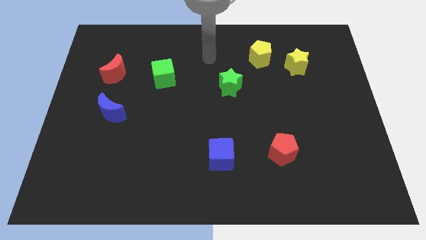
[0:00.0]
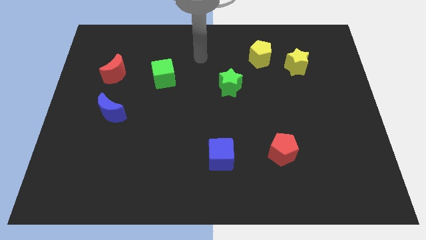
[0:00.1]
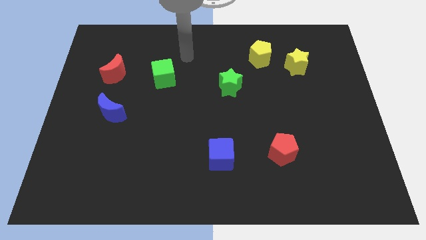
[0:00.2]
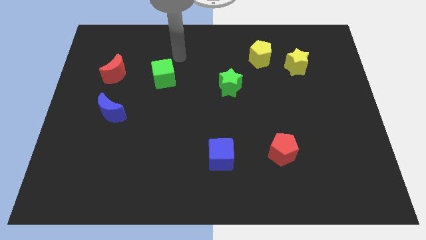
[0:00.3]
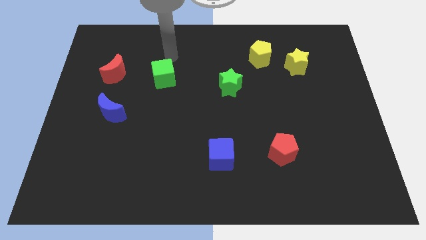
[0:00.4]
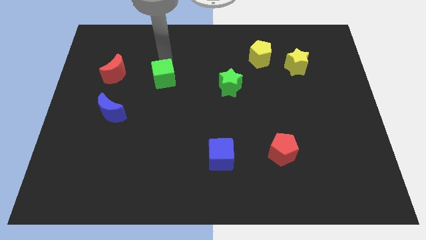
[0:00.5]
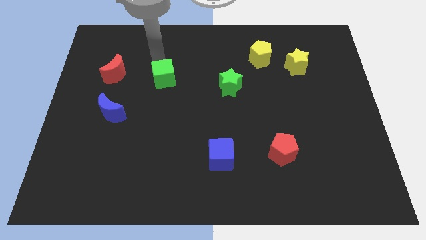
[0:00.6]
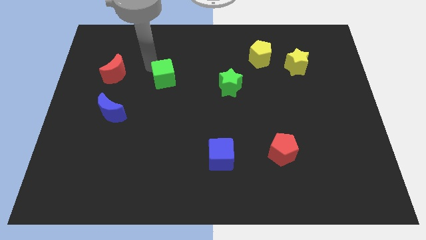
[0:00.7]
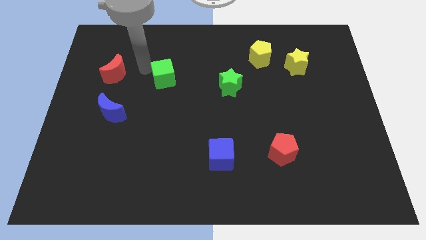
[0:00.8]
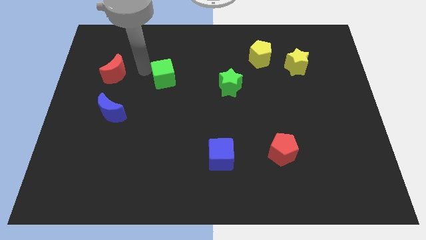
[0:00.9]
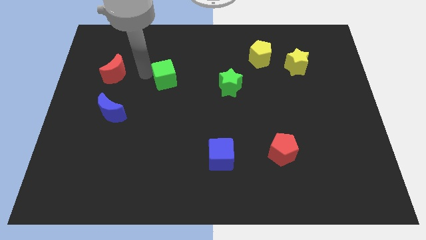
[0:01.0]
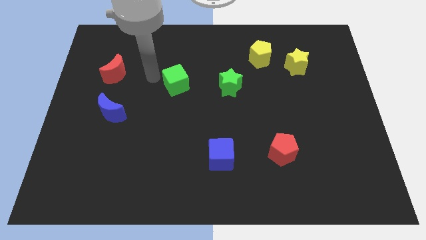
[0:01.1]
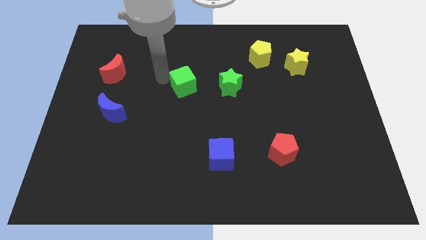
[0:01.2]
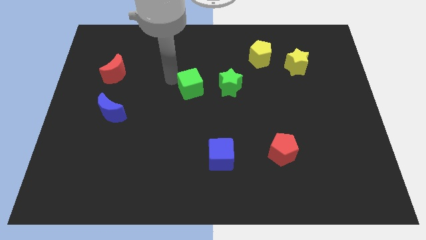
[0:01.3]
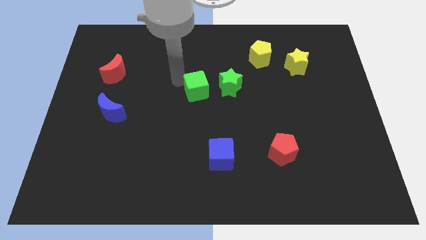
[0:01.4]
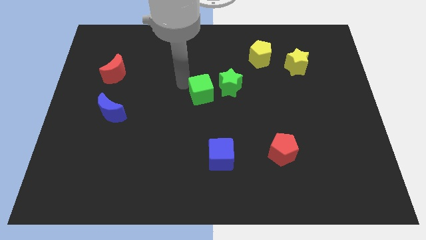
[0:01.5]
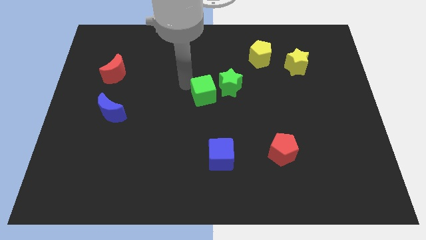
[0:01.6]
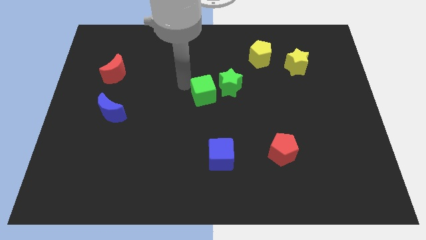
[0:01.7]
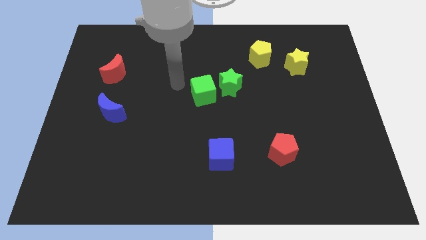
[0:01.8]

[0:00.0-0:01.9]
place the green cube to the left of green star

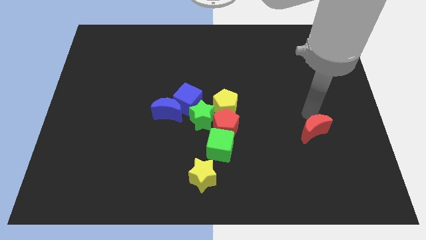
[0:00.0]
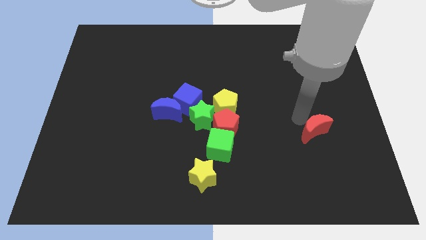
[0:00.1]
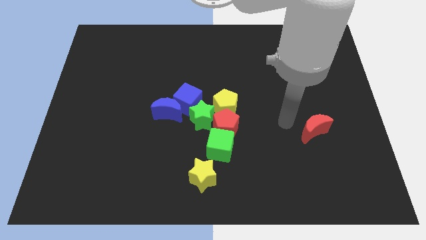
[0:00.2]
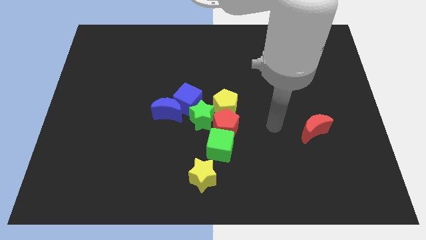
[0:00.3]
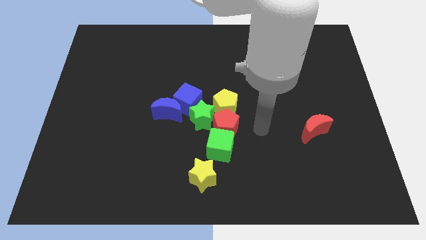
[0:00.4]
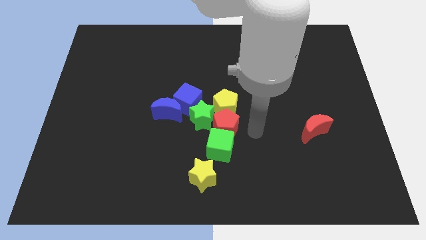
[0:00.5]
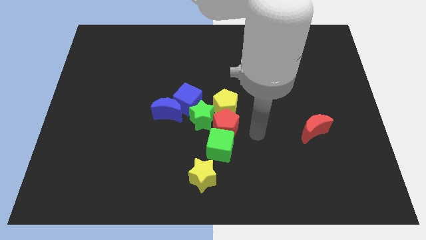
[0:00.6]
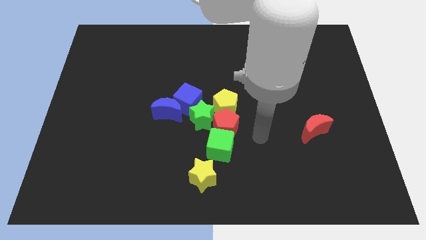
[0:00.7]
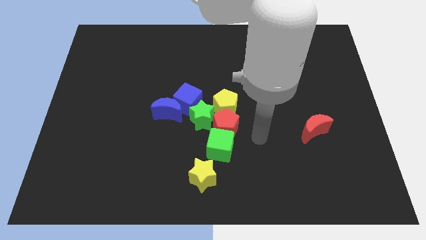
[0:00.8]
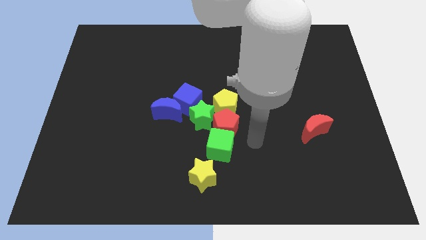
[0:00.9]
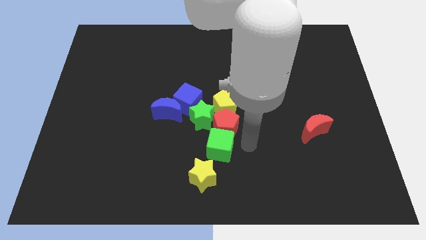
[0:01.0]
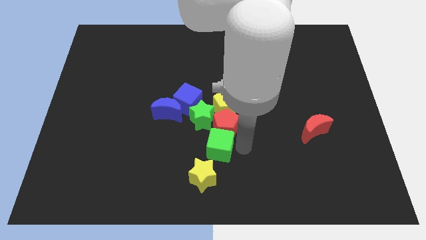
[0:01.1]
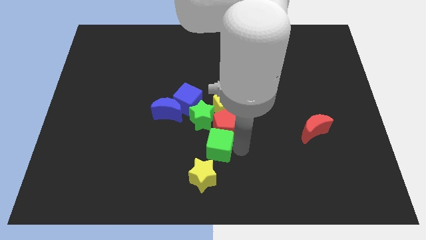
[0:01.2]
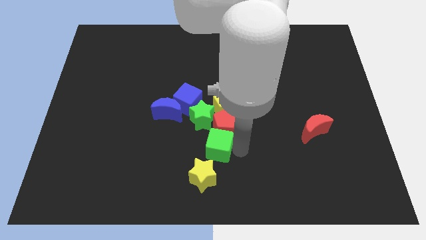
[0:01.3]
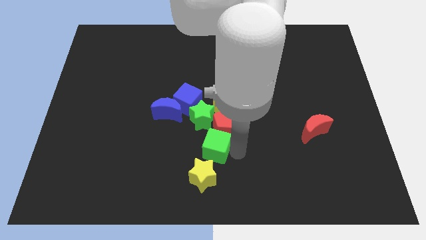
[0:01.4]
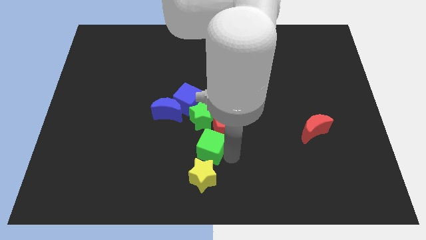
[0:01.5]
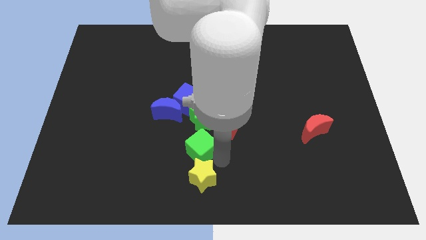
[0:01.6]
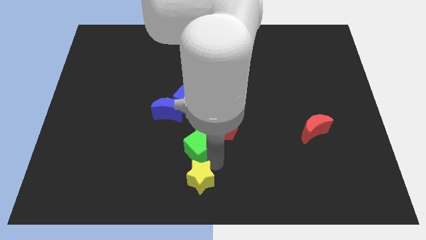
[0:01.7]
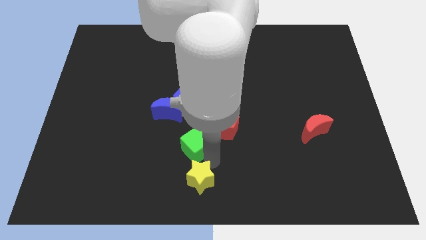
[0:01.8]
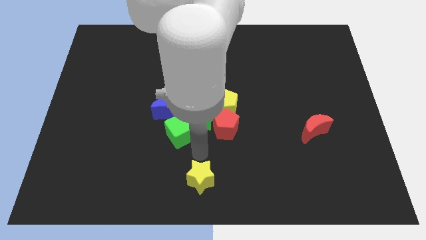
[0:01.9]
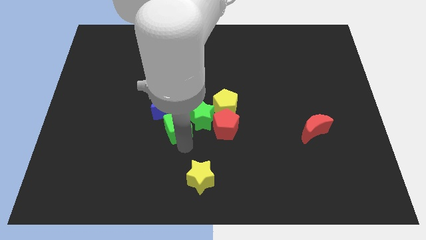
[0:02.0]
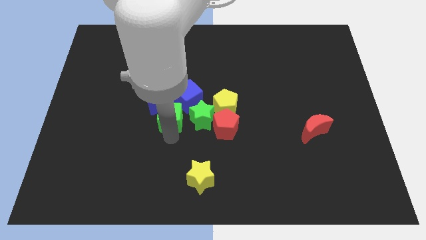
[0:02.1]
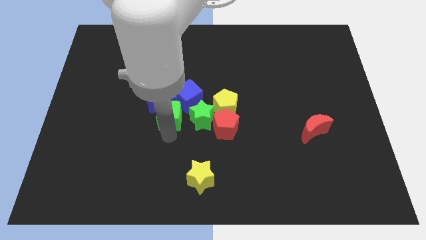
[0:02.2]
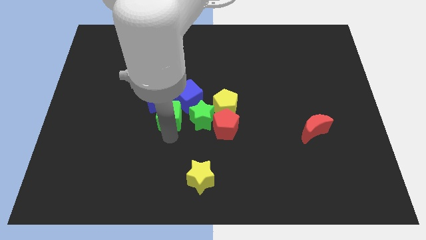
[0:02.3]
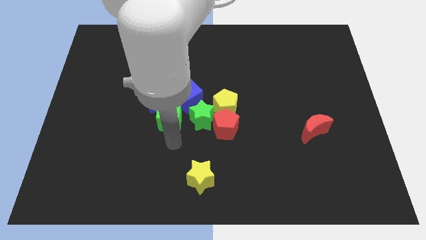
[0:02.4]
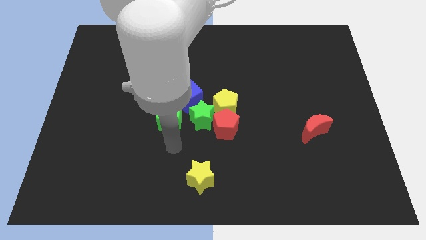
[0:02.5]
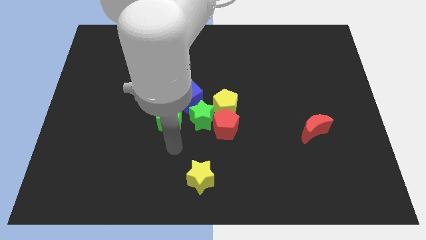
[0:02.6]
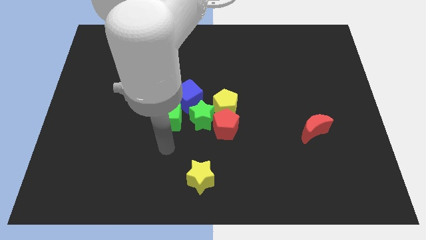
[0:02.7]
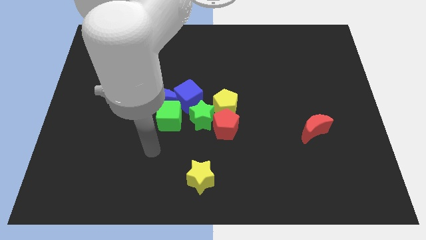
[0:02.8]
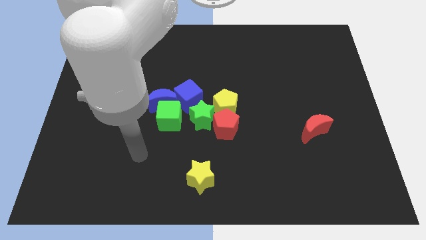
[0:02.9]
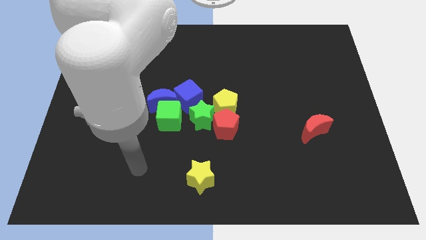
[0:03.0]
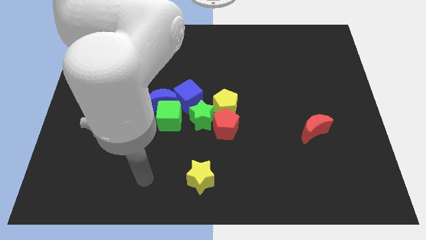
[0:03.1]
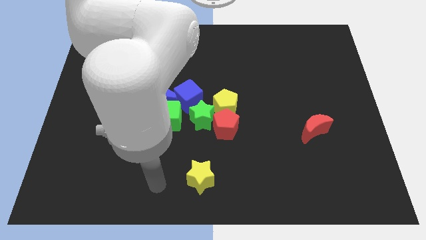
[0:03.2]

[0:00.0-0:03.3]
push the green cube towards the left of the green star

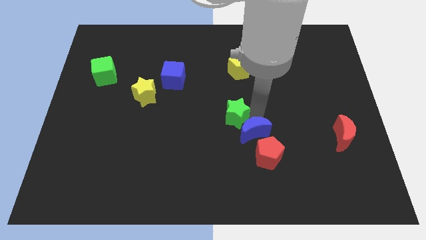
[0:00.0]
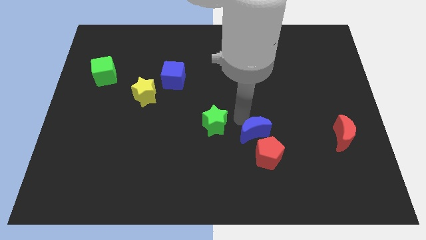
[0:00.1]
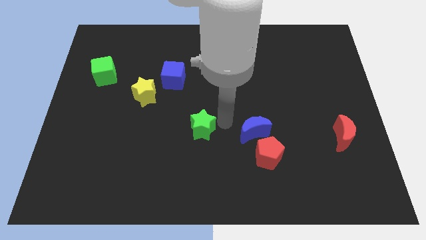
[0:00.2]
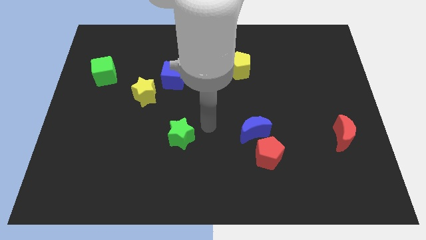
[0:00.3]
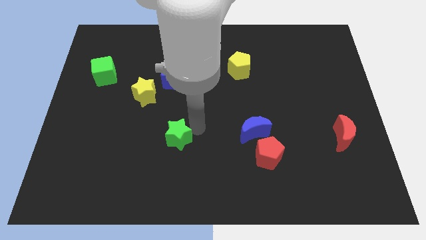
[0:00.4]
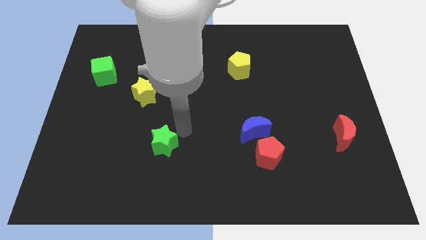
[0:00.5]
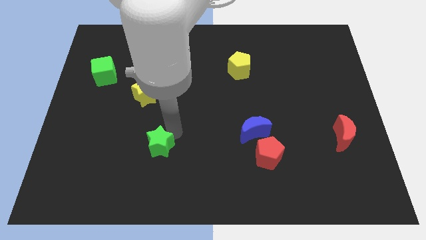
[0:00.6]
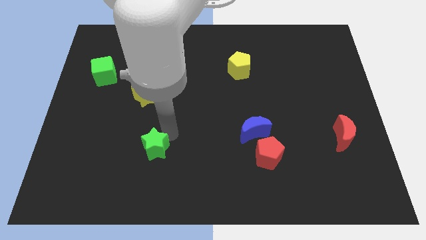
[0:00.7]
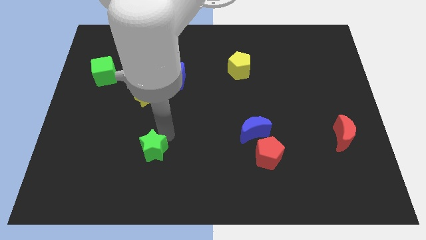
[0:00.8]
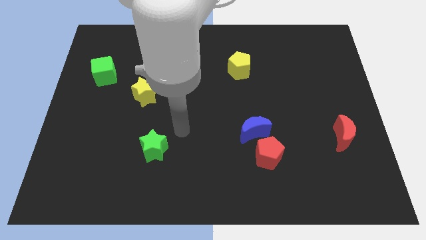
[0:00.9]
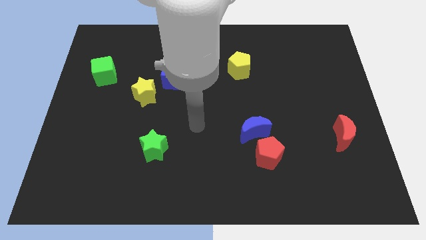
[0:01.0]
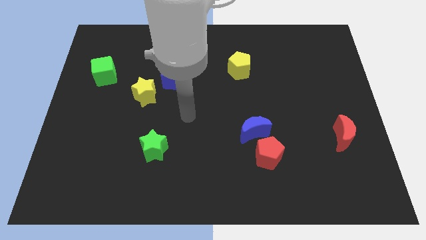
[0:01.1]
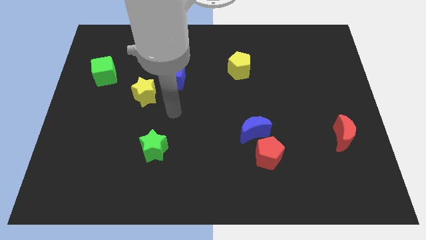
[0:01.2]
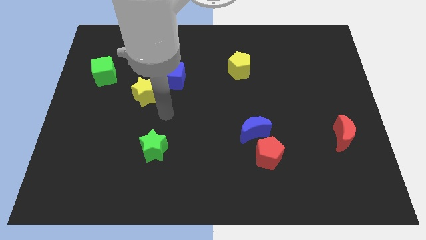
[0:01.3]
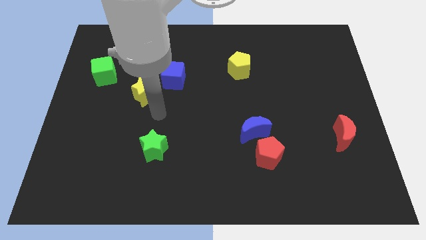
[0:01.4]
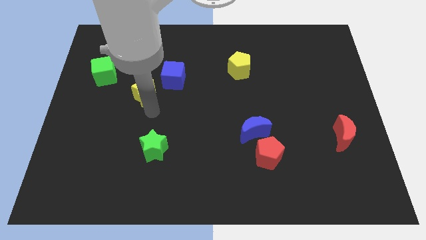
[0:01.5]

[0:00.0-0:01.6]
move the green star vertical to the blue cube

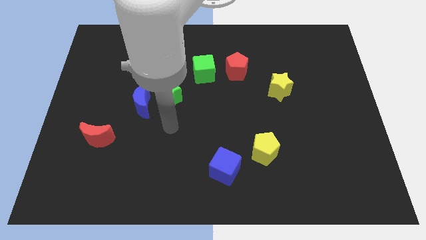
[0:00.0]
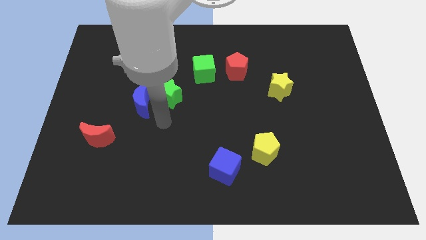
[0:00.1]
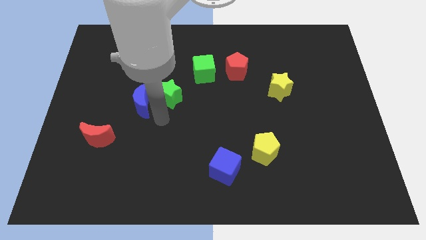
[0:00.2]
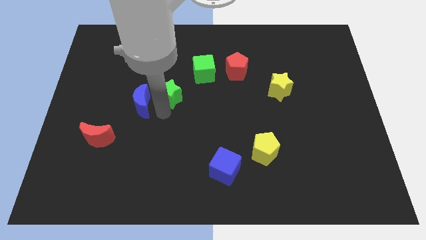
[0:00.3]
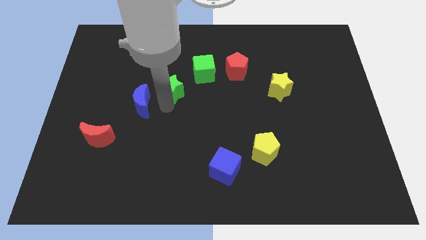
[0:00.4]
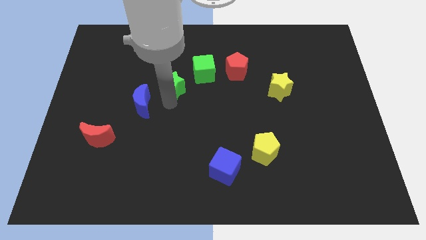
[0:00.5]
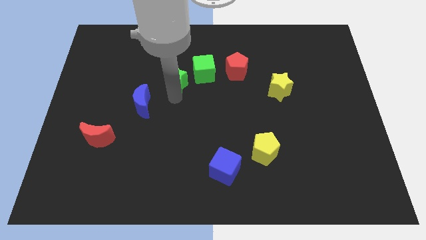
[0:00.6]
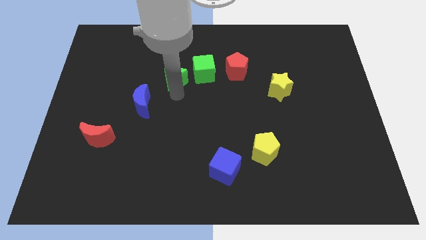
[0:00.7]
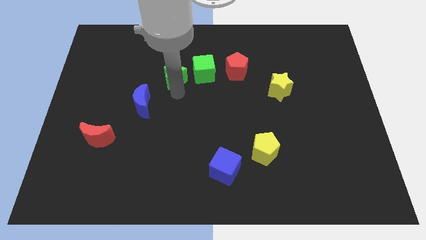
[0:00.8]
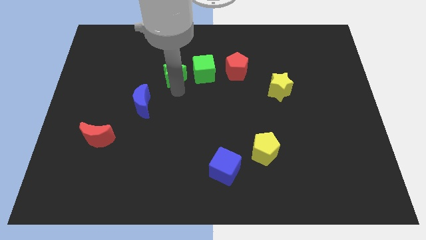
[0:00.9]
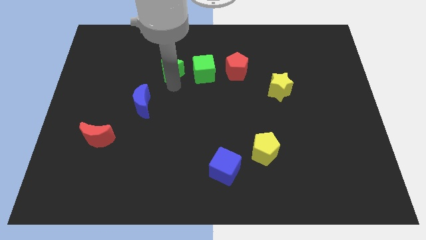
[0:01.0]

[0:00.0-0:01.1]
push green star left to green cube

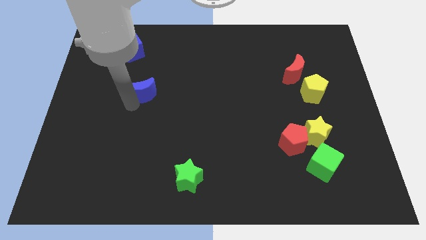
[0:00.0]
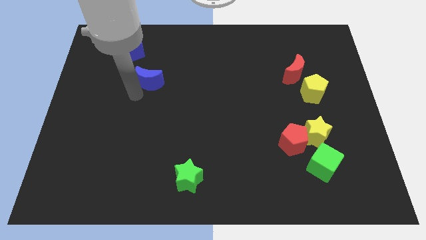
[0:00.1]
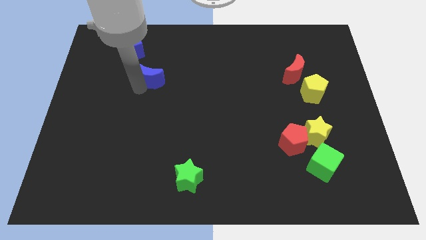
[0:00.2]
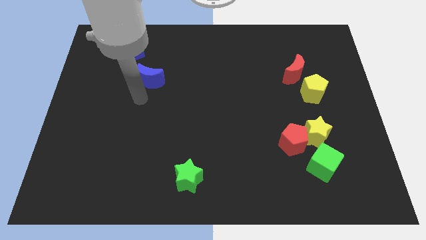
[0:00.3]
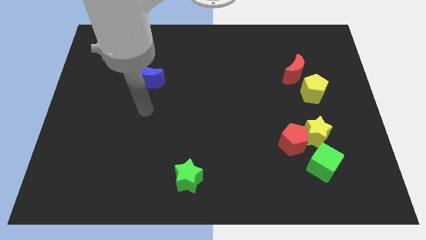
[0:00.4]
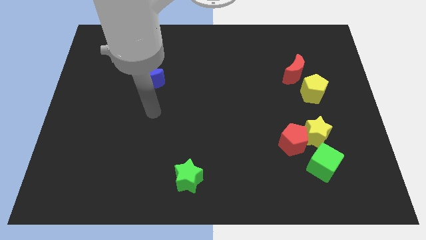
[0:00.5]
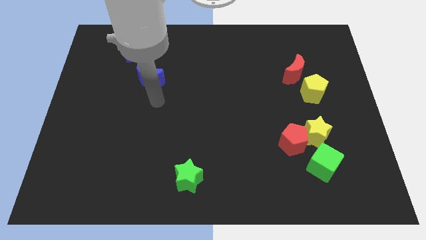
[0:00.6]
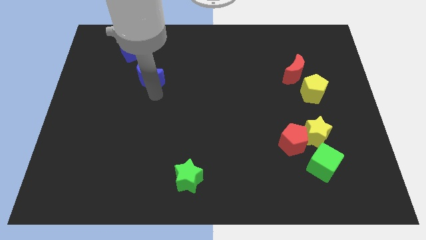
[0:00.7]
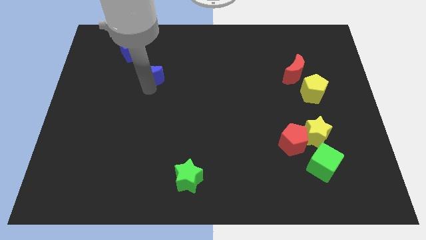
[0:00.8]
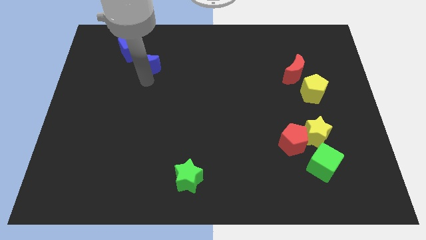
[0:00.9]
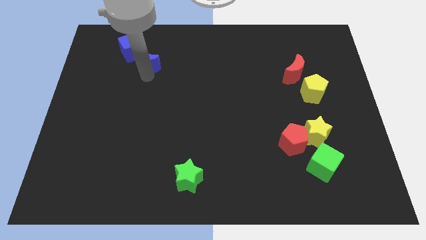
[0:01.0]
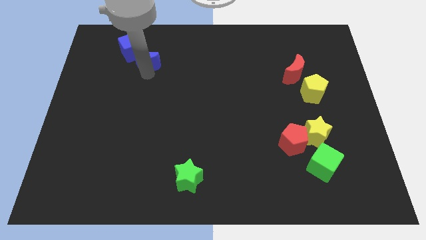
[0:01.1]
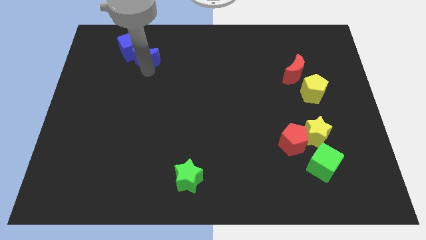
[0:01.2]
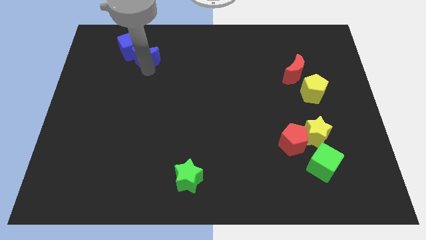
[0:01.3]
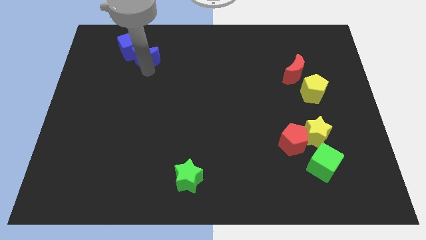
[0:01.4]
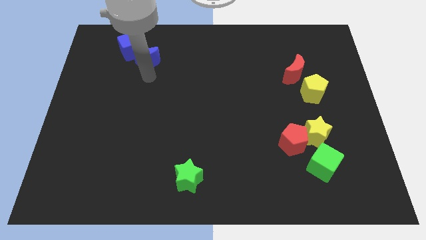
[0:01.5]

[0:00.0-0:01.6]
put blue blocks together
